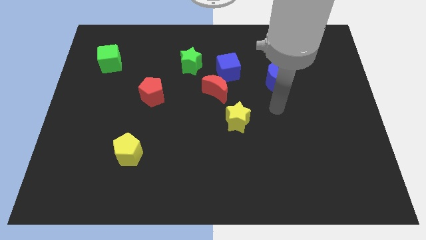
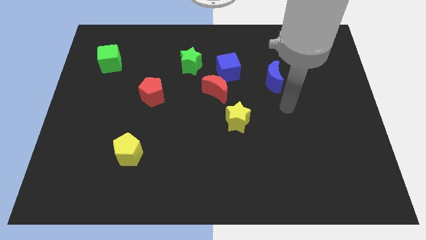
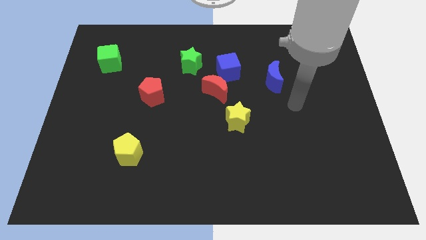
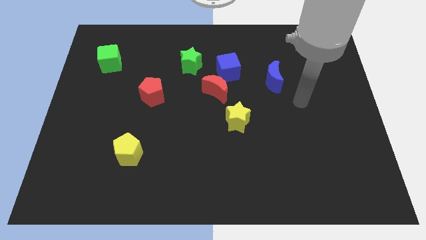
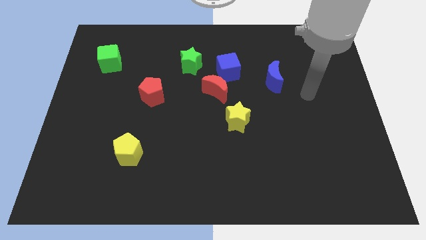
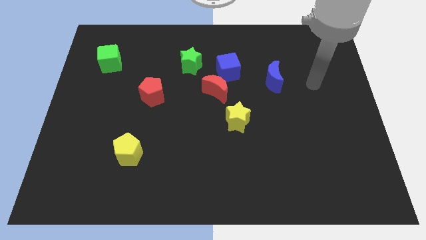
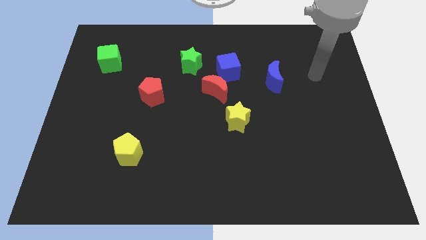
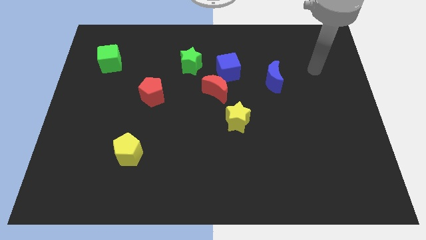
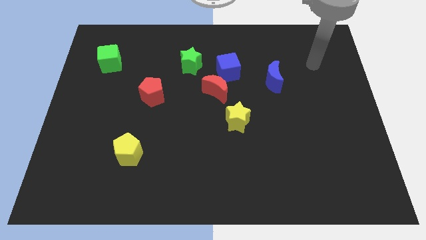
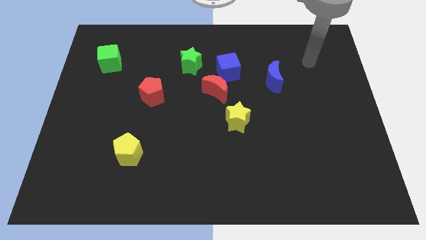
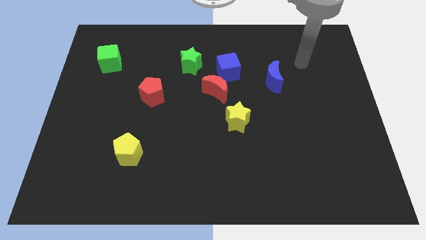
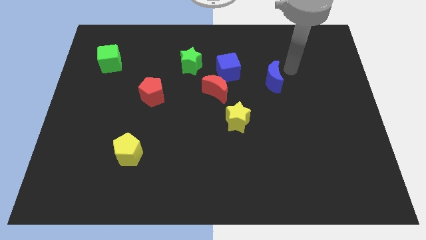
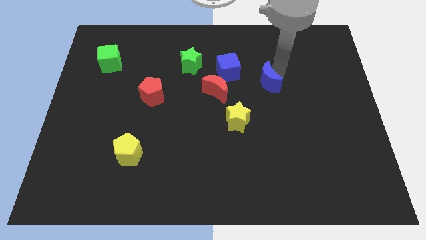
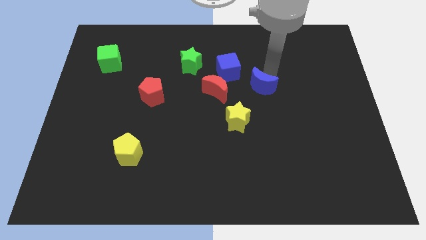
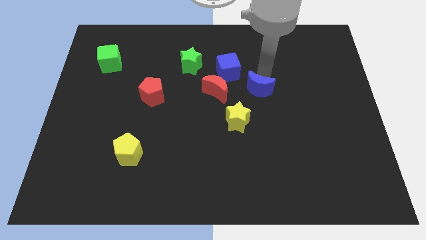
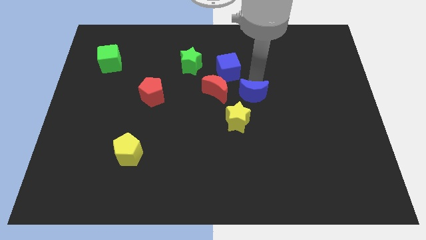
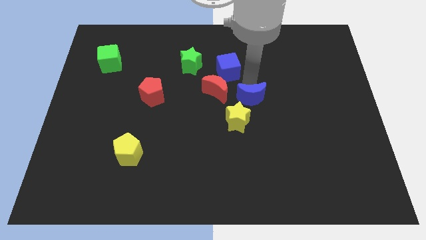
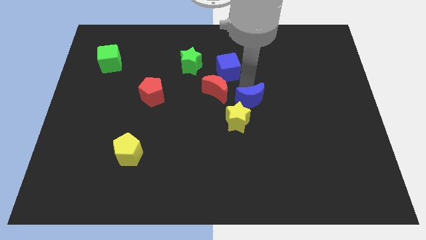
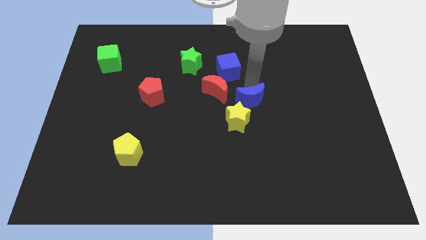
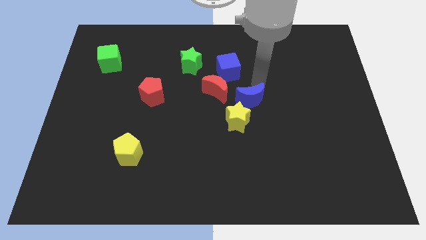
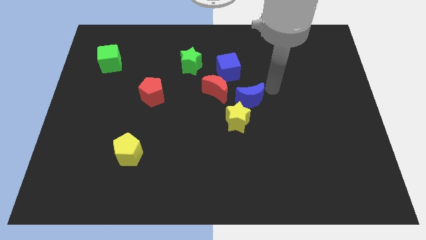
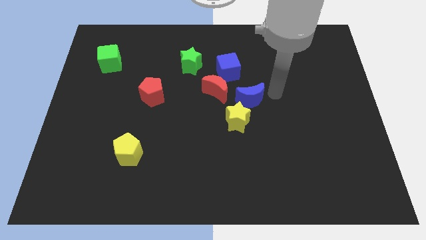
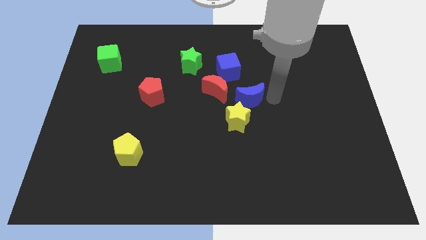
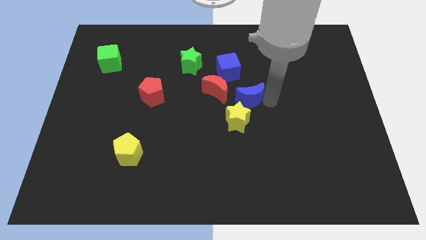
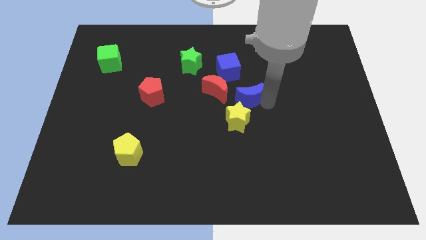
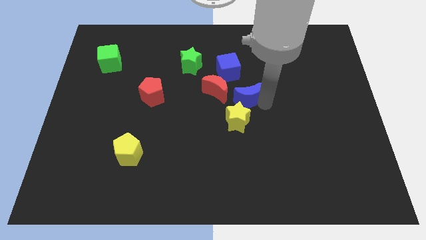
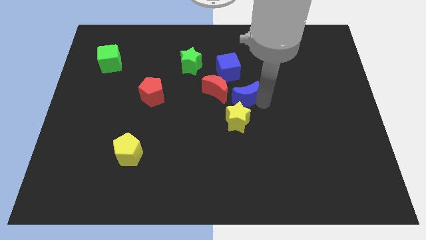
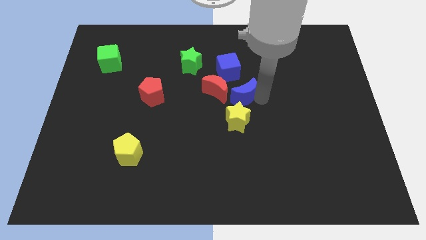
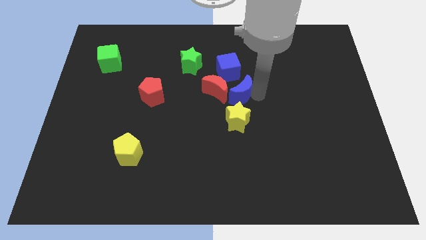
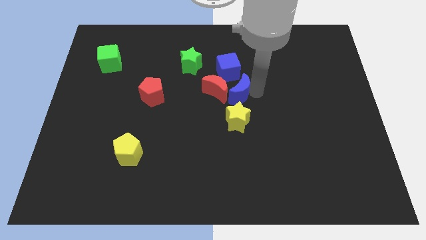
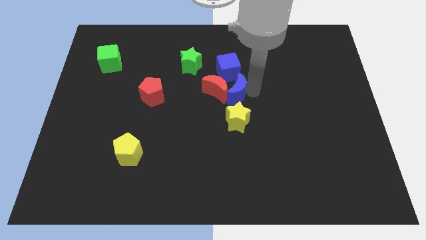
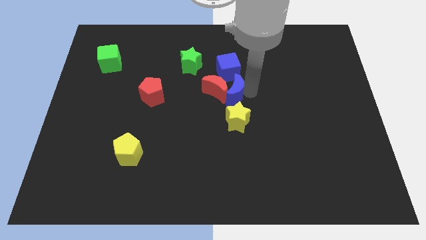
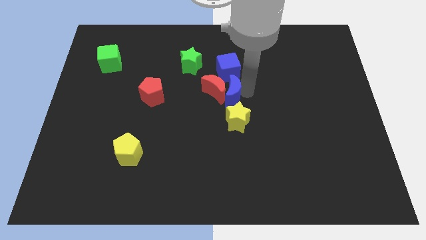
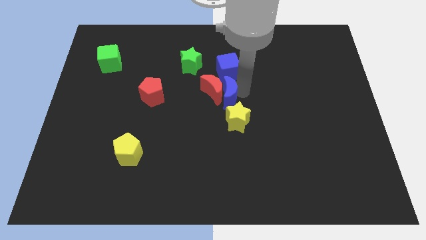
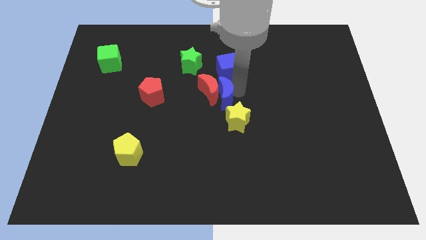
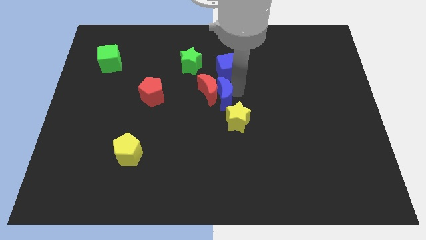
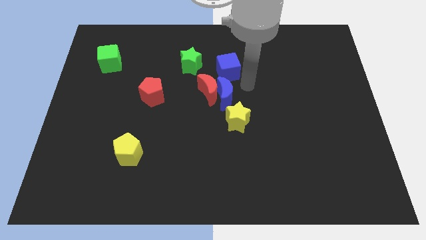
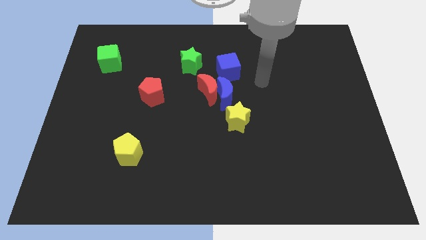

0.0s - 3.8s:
push the blue crescent to the top of the yellow star

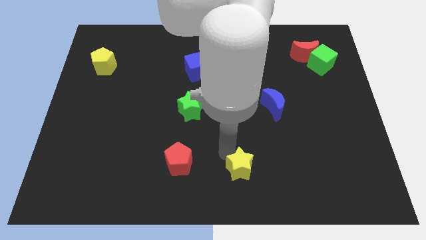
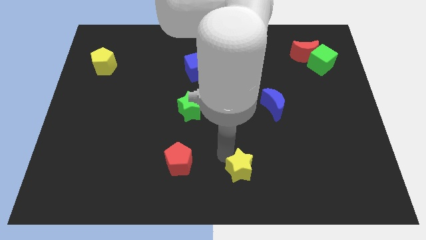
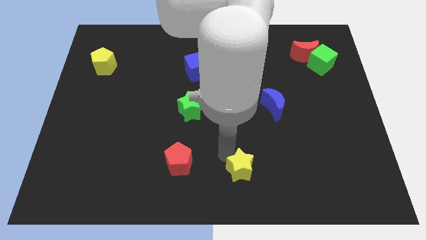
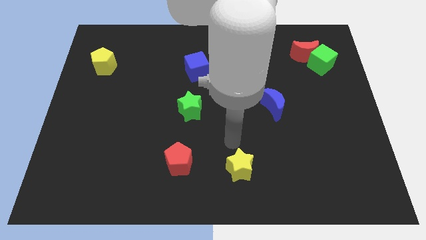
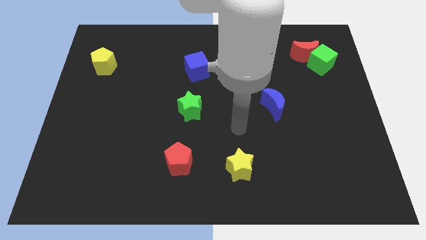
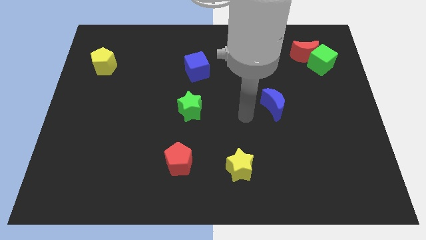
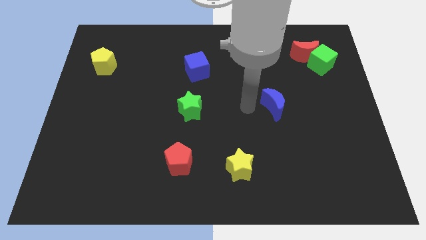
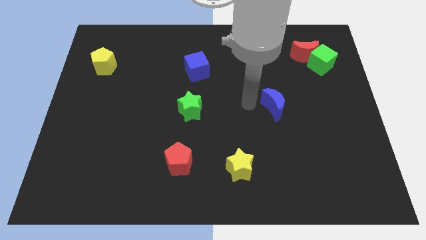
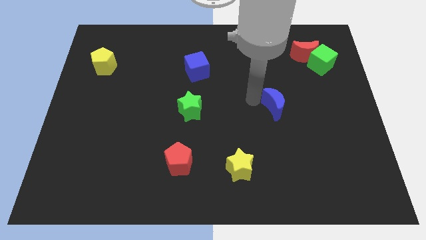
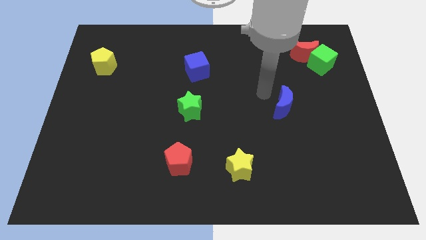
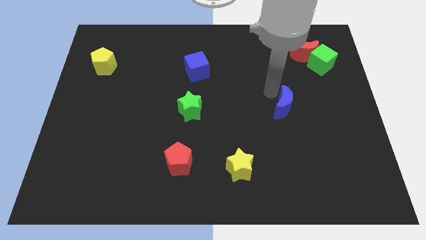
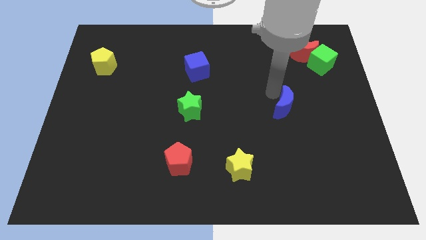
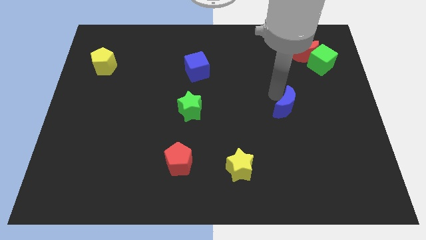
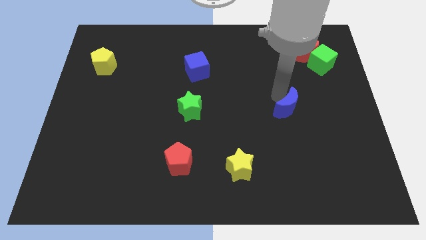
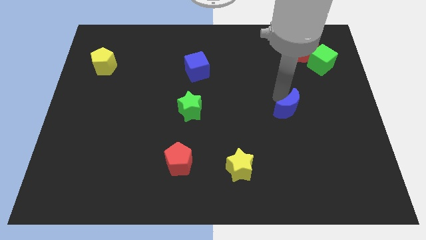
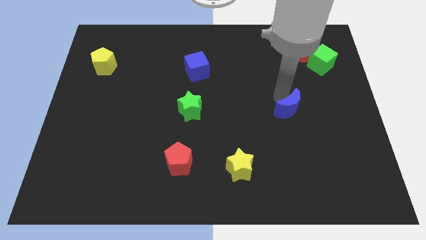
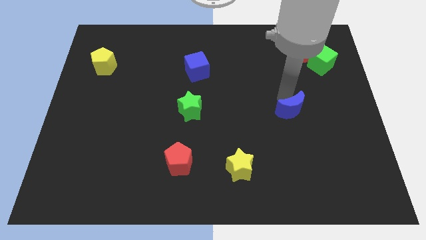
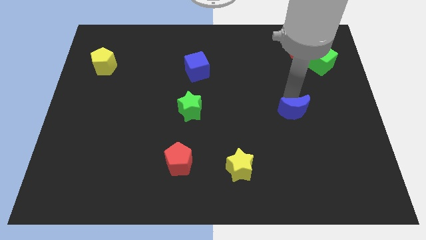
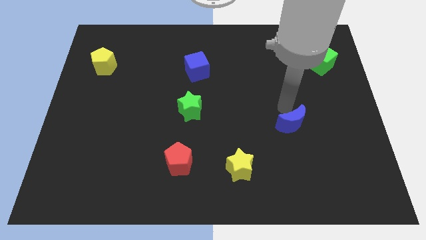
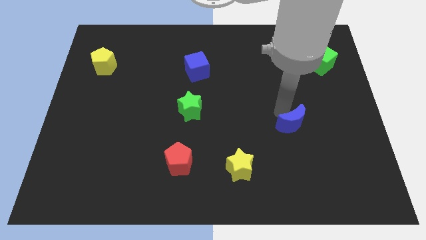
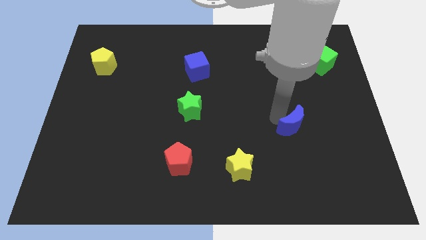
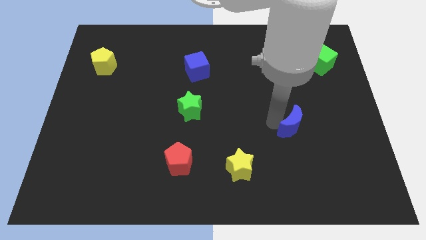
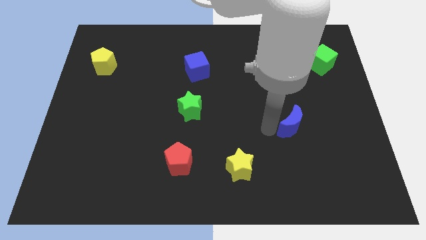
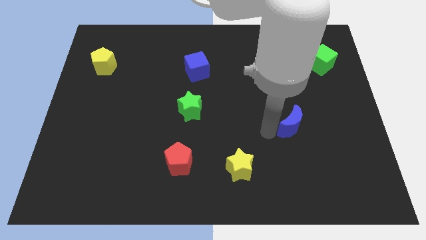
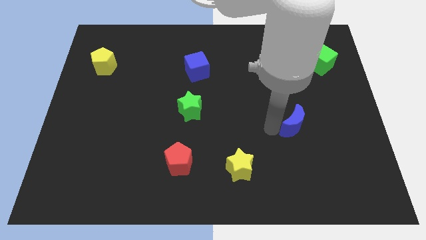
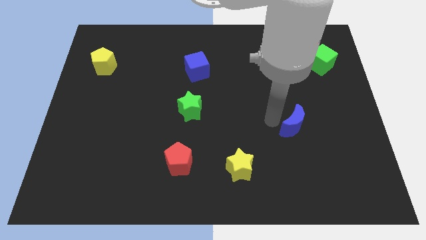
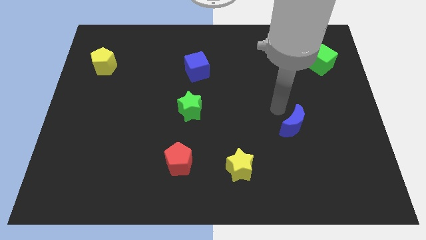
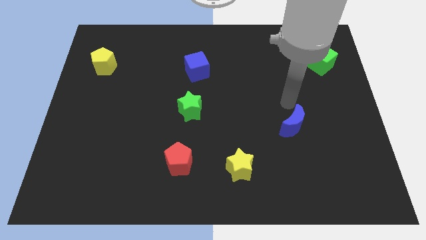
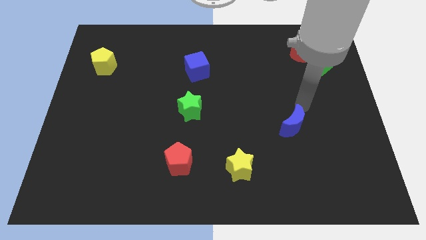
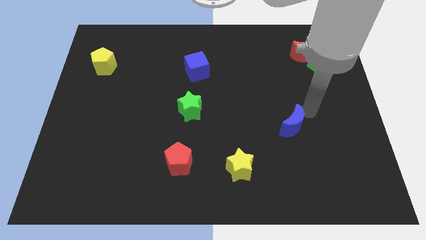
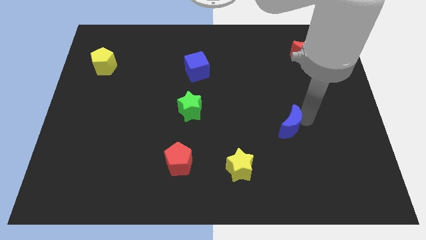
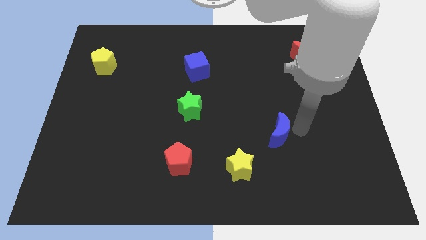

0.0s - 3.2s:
move the blue moon diagonally to the right of the yellow star

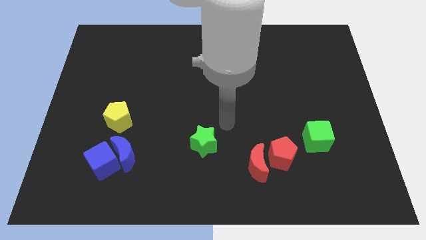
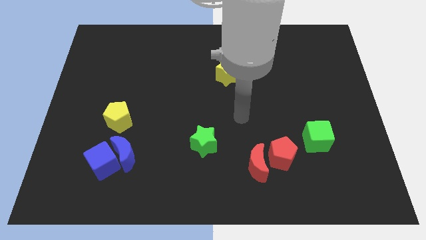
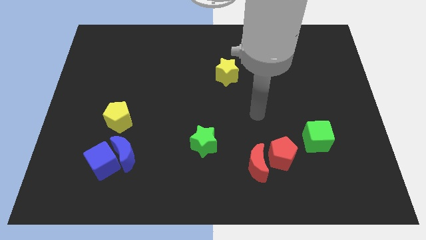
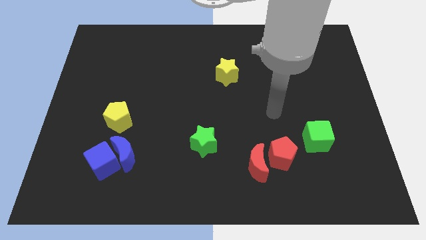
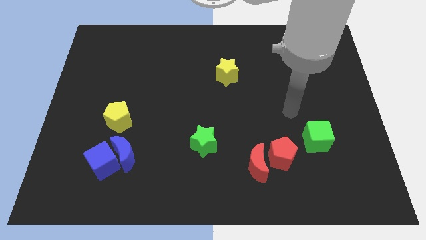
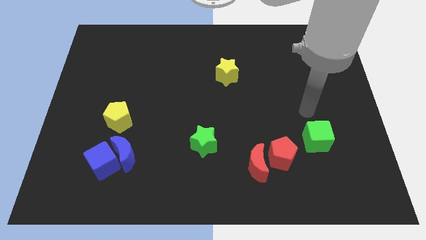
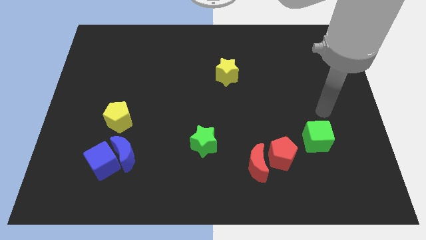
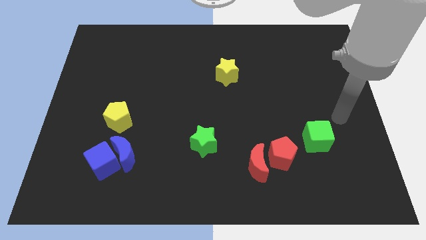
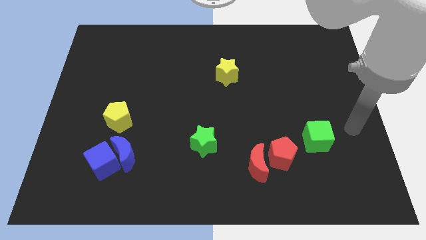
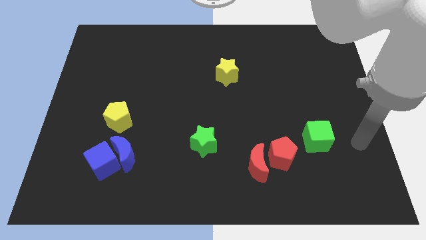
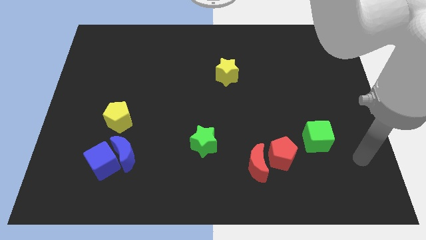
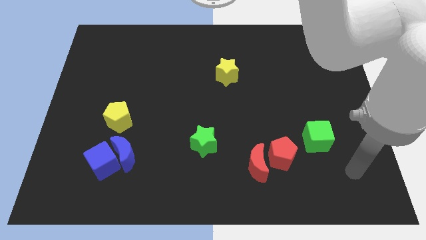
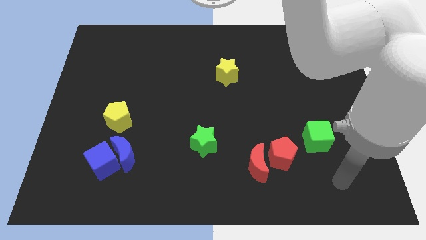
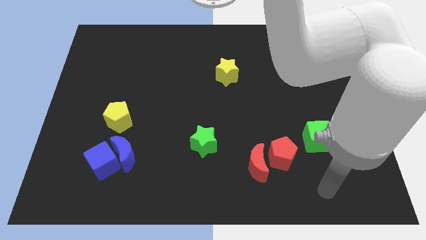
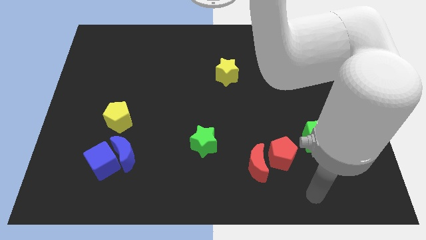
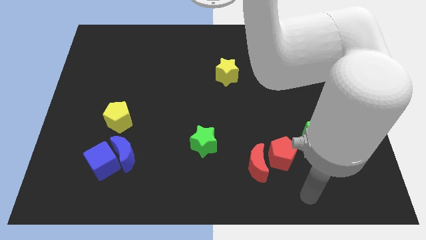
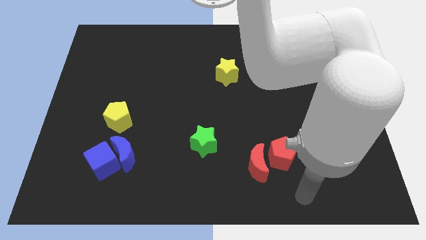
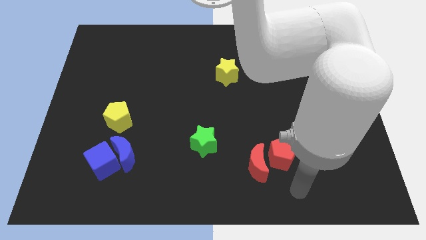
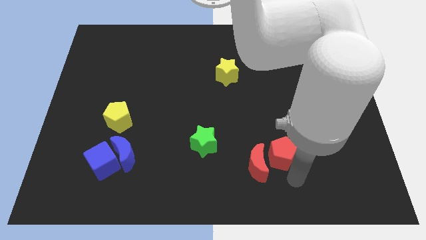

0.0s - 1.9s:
point your arm below red pentagon
